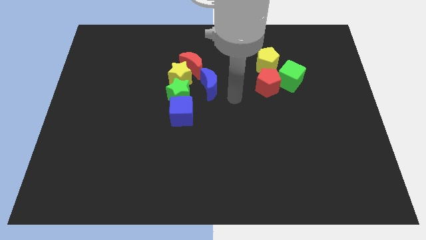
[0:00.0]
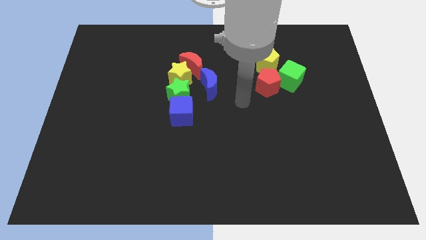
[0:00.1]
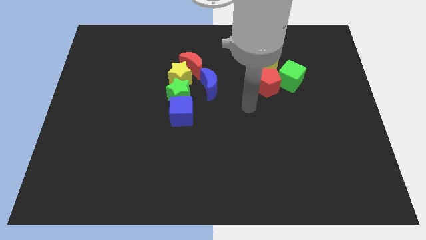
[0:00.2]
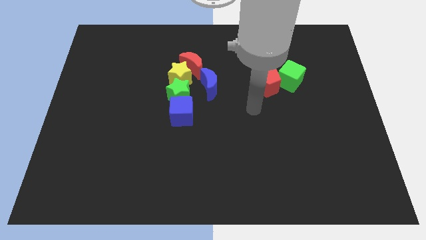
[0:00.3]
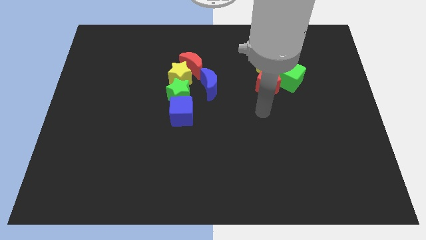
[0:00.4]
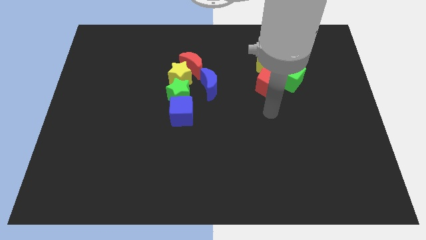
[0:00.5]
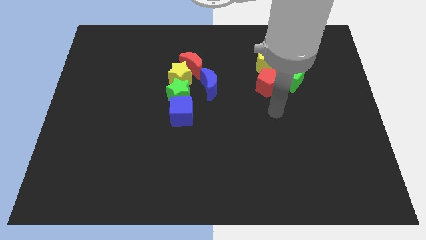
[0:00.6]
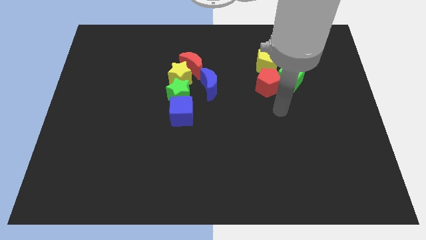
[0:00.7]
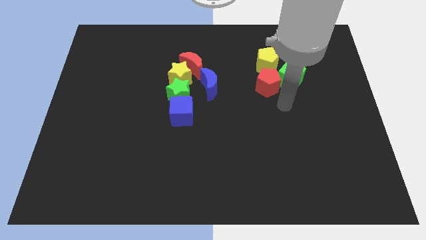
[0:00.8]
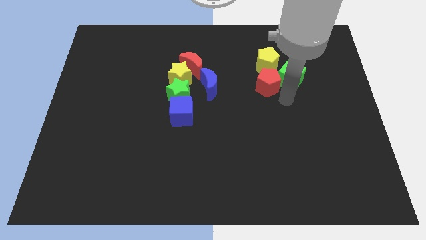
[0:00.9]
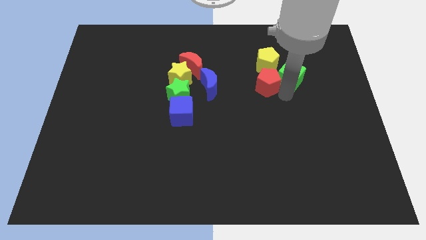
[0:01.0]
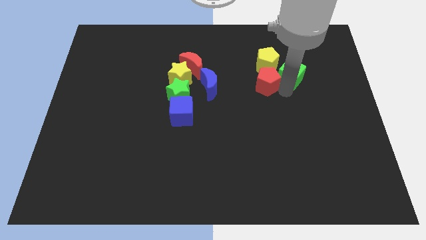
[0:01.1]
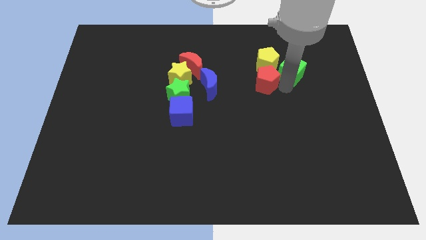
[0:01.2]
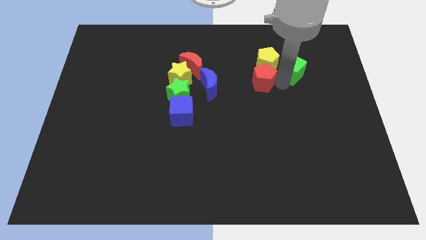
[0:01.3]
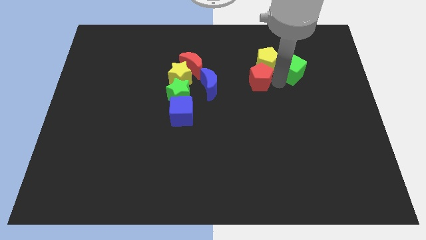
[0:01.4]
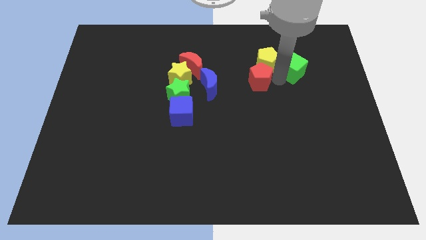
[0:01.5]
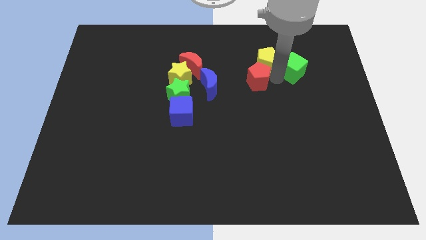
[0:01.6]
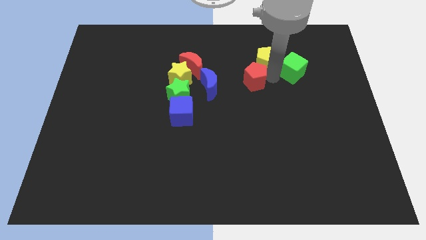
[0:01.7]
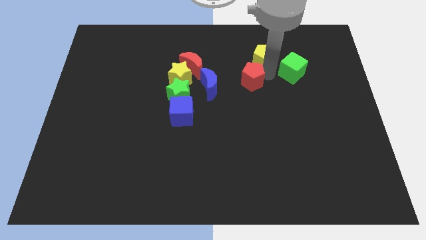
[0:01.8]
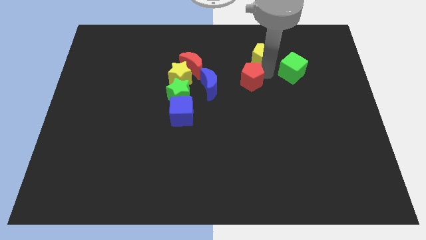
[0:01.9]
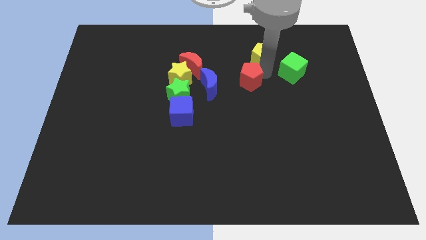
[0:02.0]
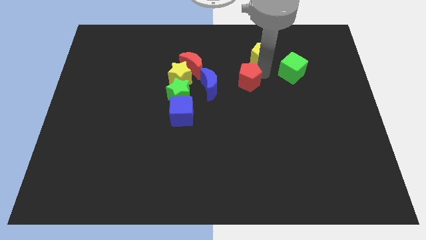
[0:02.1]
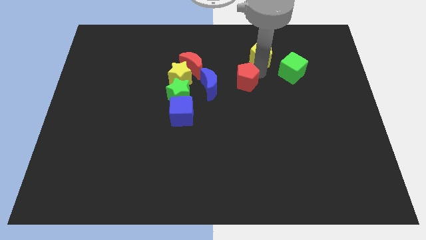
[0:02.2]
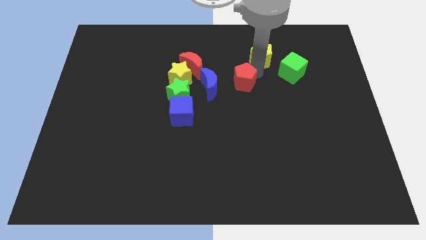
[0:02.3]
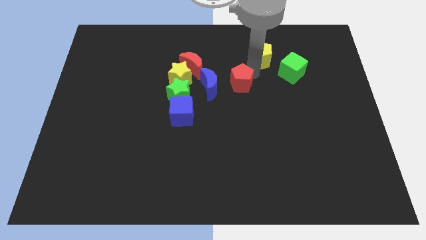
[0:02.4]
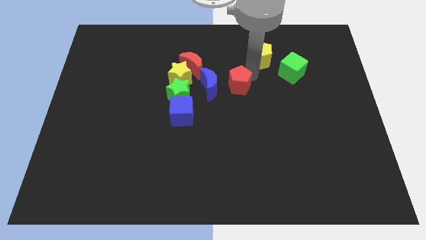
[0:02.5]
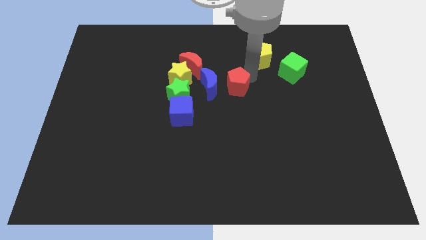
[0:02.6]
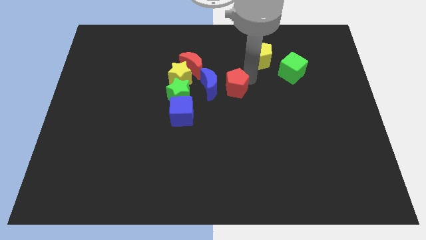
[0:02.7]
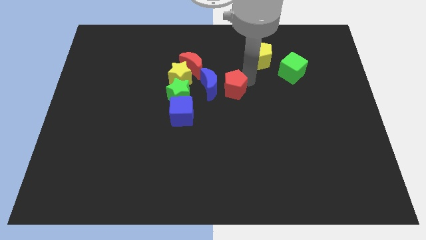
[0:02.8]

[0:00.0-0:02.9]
move the red pentagon close to the right side of the blue crescent

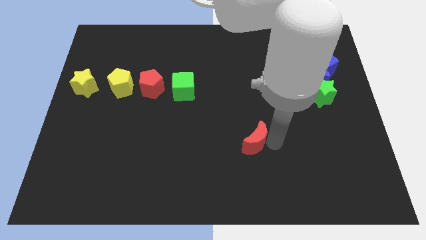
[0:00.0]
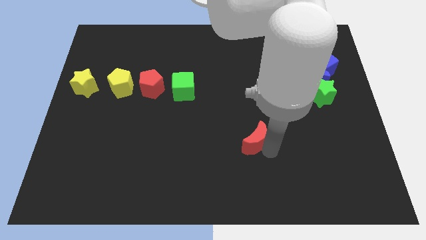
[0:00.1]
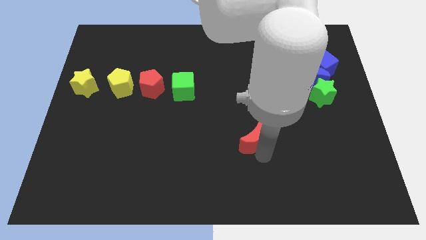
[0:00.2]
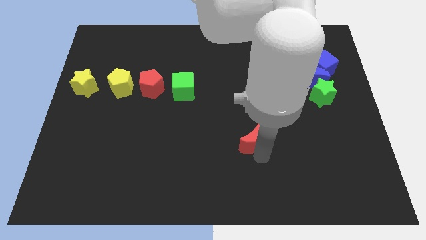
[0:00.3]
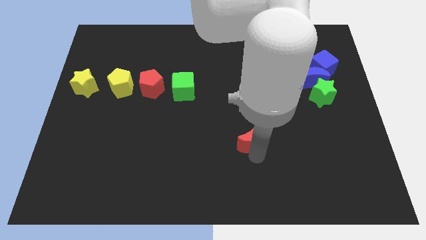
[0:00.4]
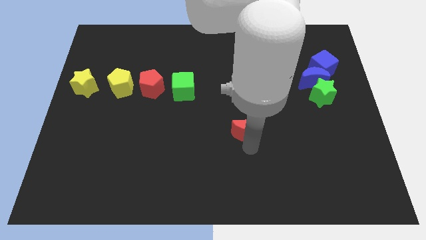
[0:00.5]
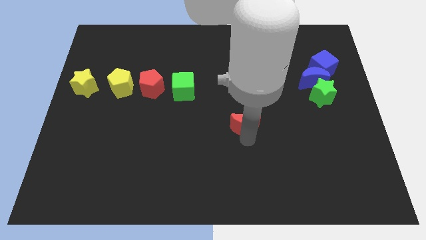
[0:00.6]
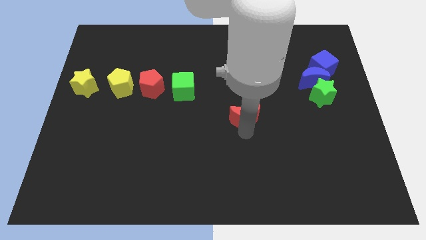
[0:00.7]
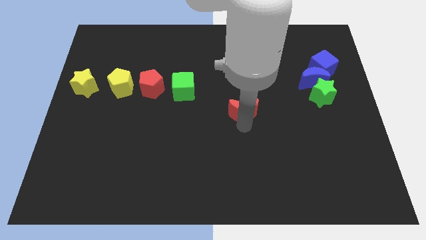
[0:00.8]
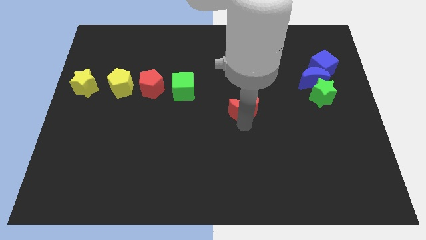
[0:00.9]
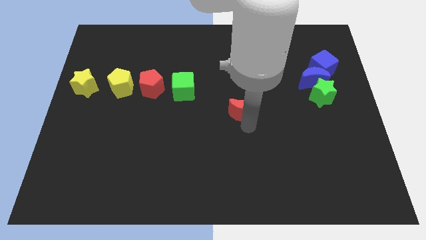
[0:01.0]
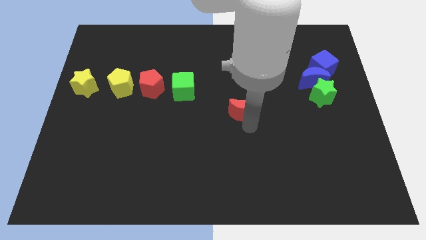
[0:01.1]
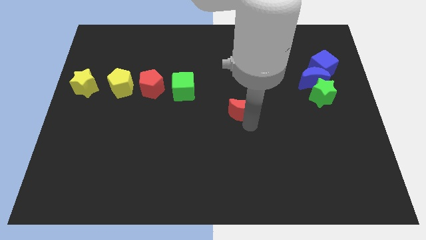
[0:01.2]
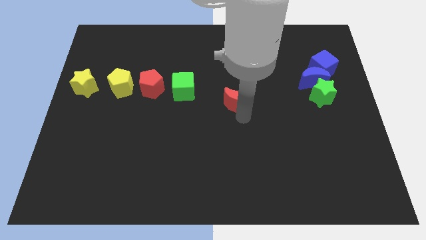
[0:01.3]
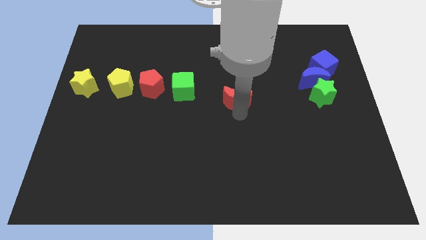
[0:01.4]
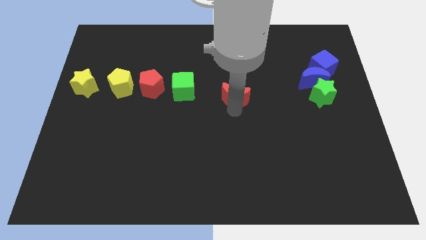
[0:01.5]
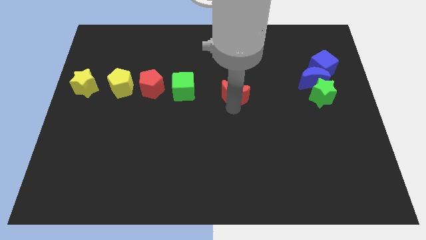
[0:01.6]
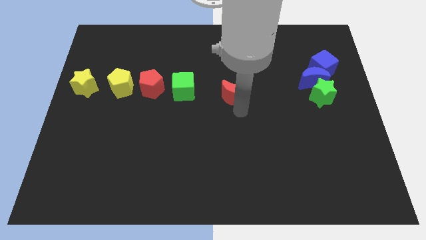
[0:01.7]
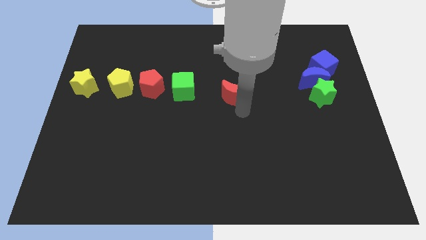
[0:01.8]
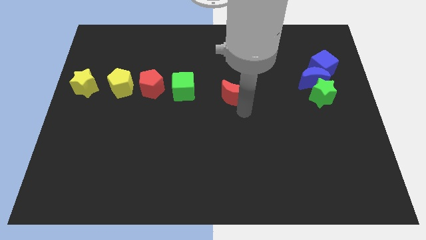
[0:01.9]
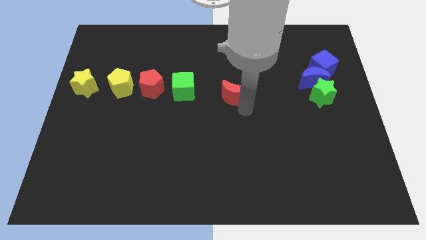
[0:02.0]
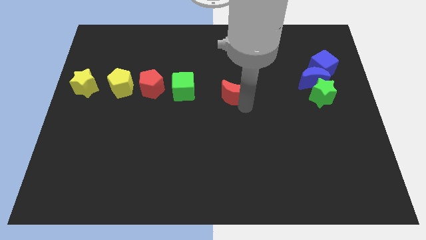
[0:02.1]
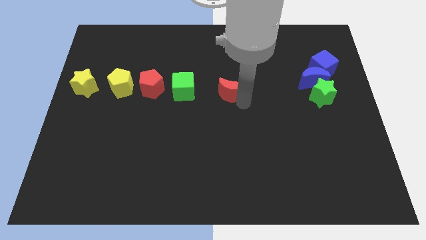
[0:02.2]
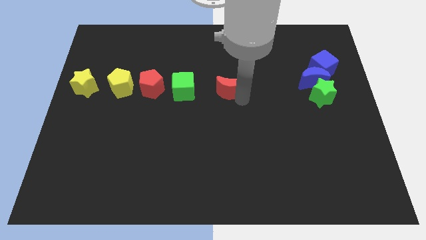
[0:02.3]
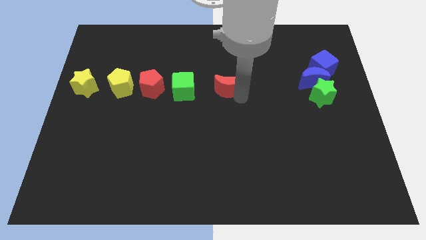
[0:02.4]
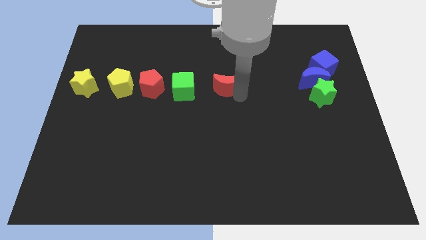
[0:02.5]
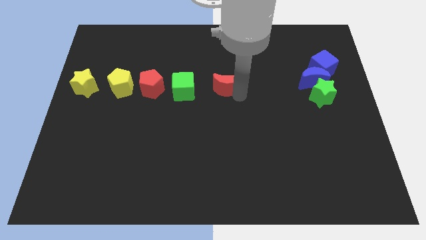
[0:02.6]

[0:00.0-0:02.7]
place red crescent beside green cube

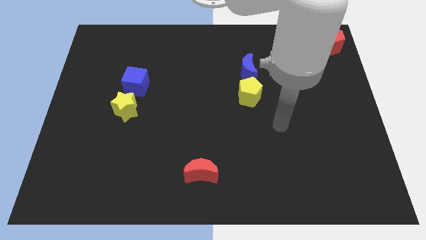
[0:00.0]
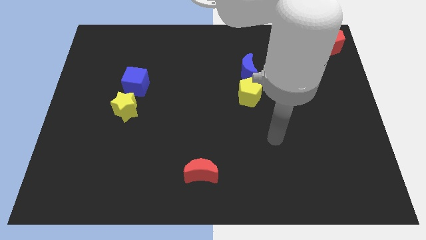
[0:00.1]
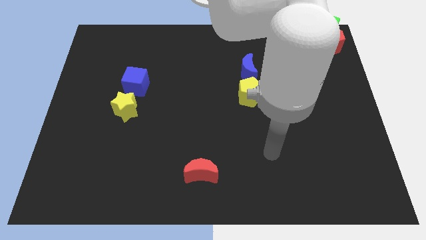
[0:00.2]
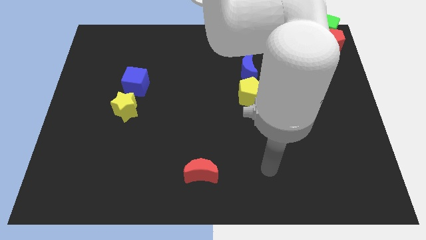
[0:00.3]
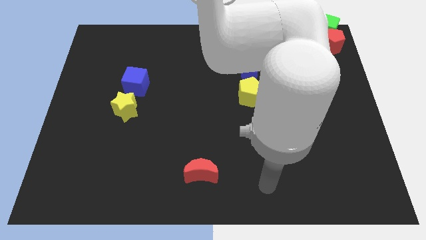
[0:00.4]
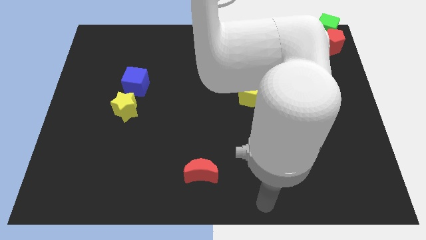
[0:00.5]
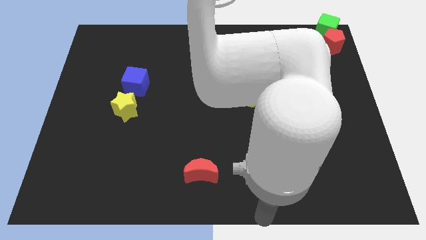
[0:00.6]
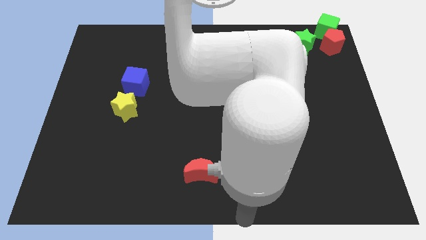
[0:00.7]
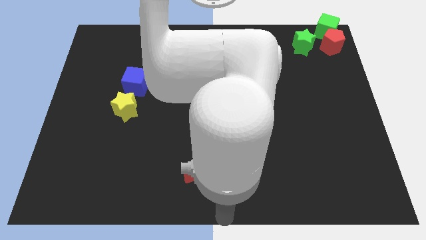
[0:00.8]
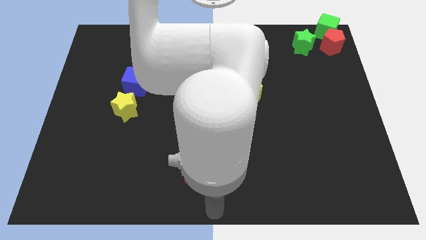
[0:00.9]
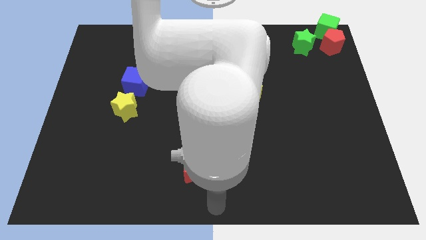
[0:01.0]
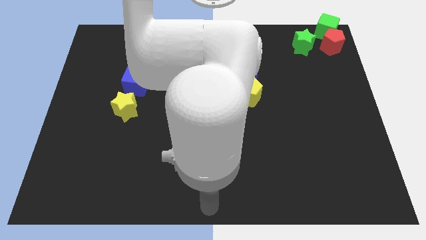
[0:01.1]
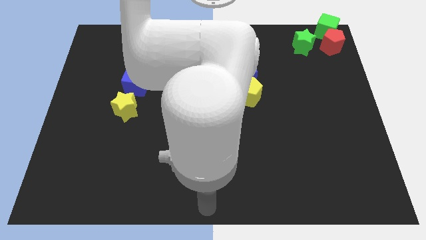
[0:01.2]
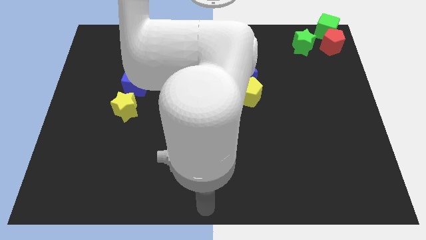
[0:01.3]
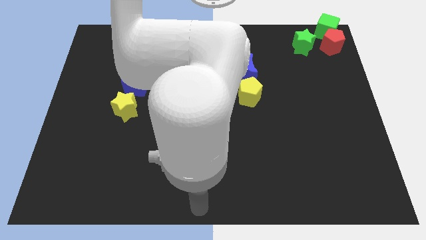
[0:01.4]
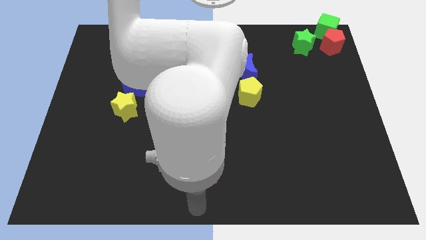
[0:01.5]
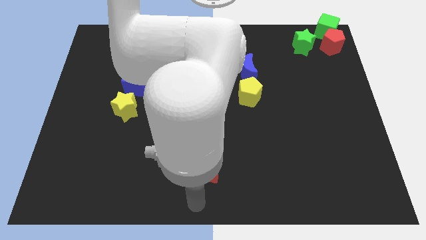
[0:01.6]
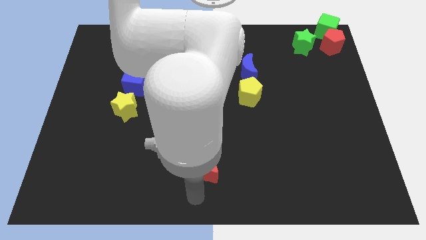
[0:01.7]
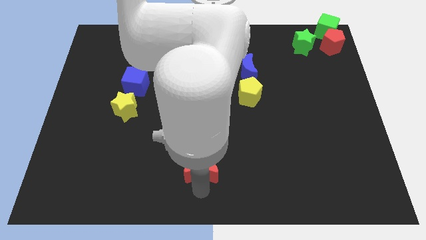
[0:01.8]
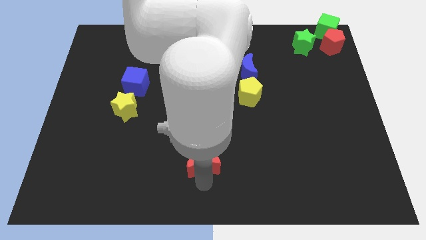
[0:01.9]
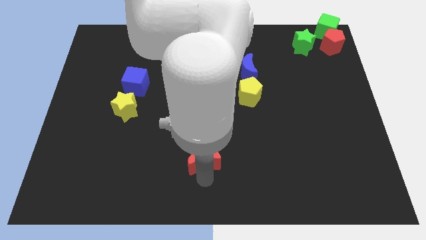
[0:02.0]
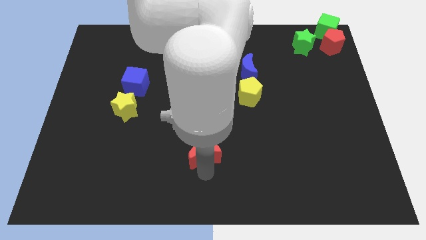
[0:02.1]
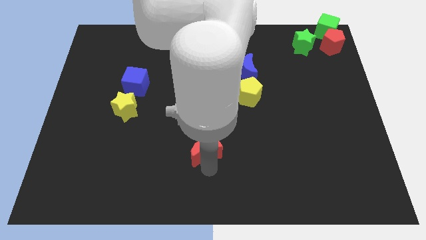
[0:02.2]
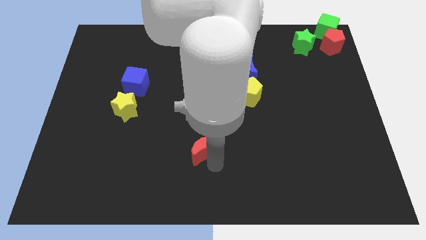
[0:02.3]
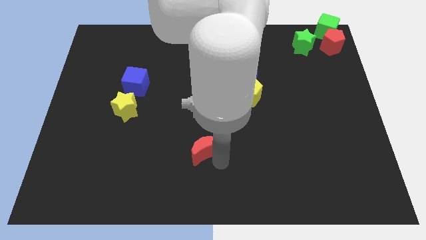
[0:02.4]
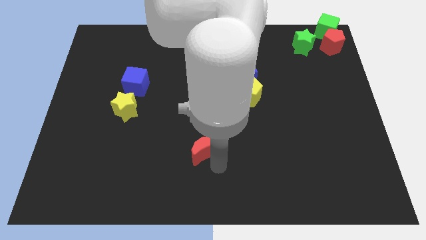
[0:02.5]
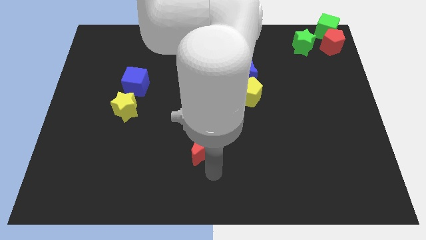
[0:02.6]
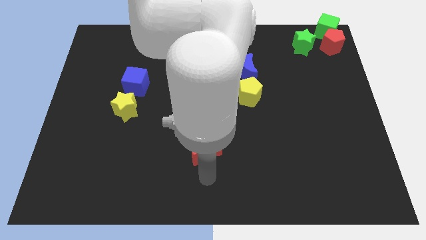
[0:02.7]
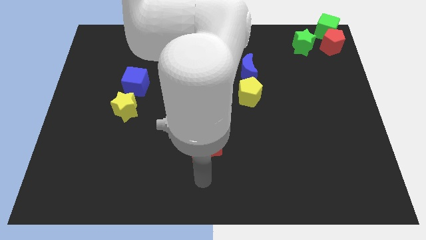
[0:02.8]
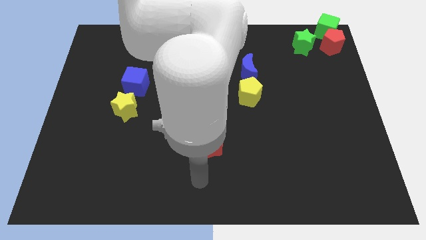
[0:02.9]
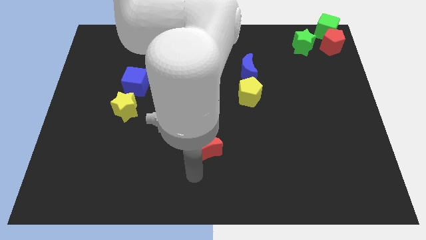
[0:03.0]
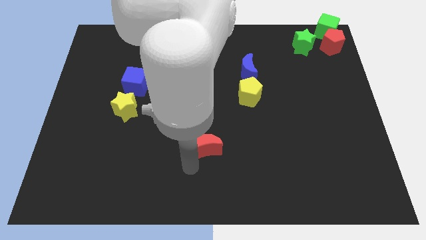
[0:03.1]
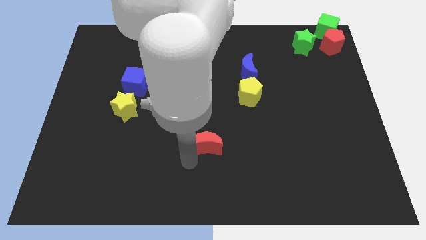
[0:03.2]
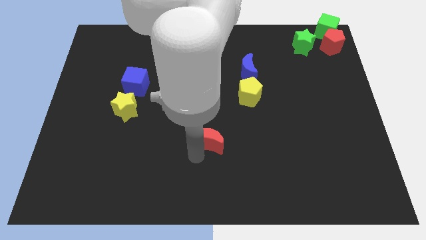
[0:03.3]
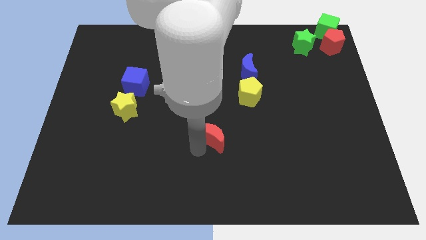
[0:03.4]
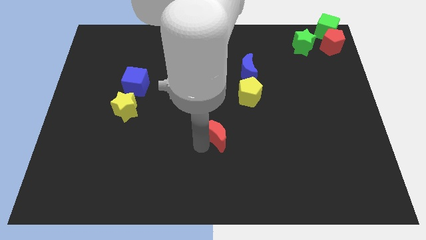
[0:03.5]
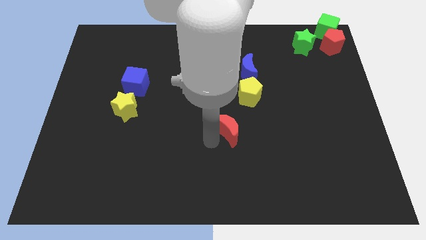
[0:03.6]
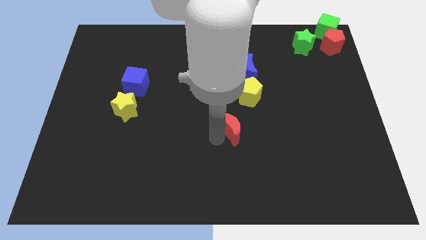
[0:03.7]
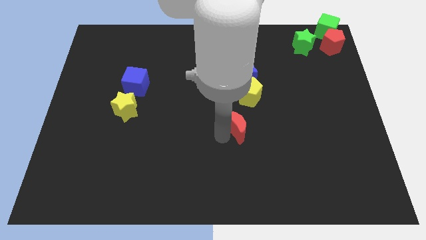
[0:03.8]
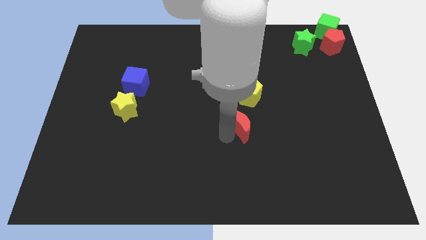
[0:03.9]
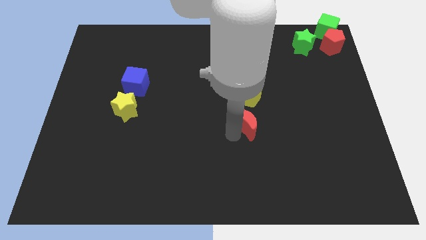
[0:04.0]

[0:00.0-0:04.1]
move red moon below the yellow pentagon
